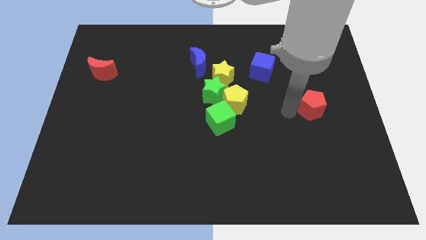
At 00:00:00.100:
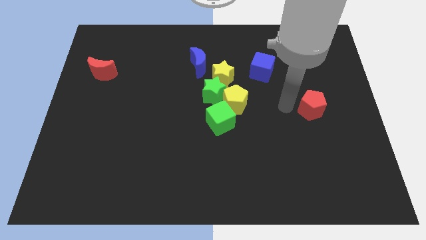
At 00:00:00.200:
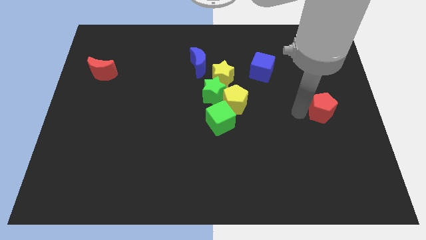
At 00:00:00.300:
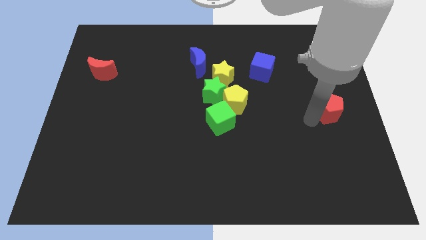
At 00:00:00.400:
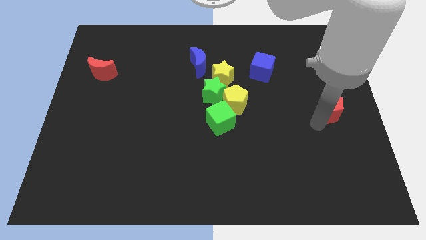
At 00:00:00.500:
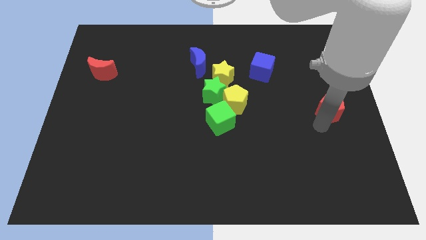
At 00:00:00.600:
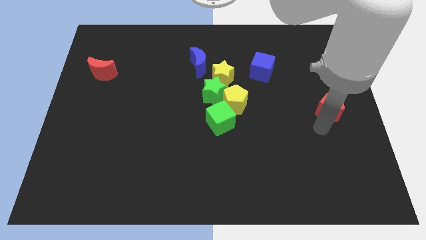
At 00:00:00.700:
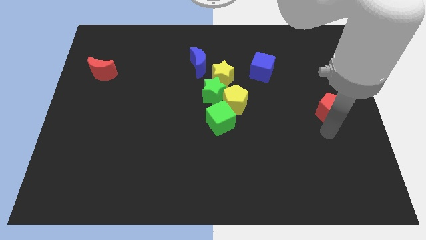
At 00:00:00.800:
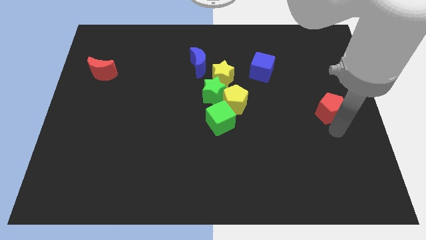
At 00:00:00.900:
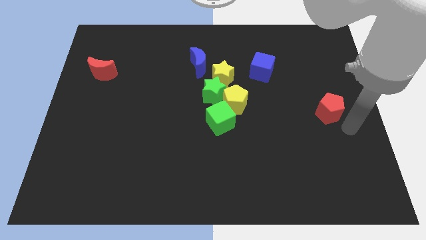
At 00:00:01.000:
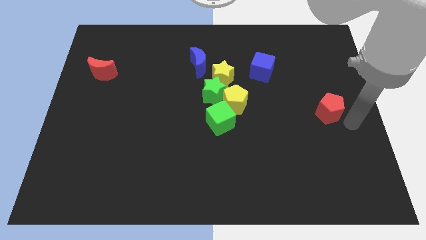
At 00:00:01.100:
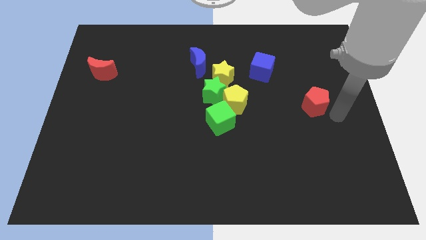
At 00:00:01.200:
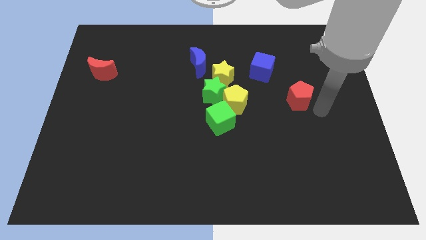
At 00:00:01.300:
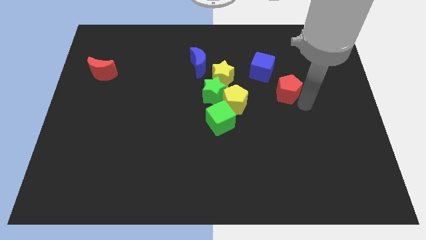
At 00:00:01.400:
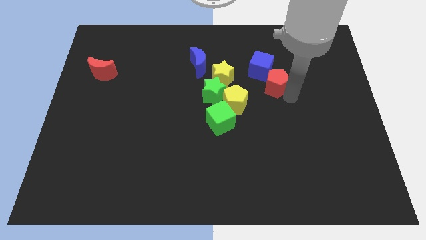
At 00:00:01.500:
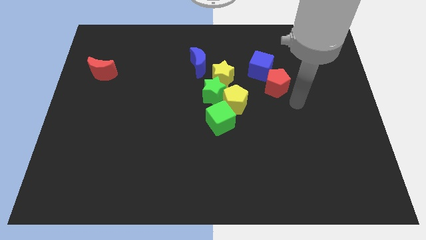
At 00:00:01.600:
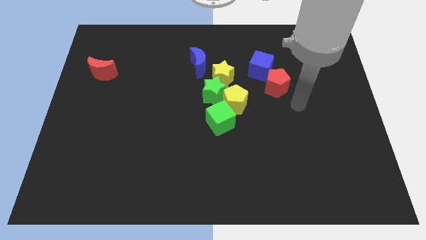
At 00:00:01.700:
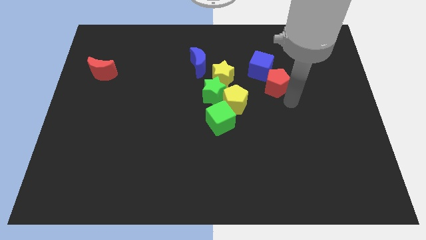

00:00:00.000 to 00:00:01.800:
slide the red pentagon to the bottom right side of the blue cube

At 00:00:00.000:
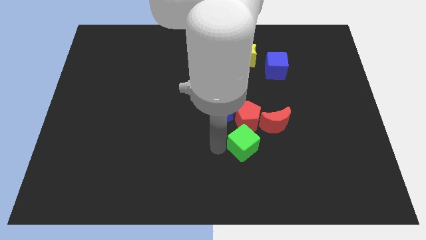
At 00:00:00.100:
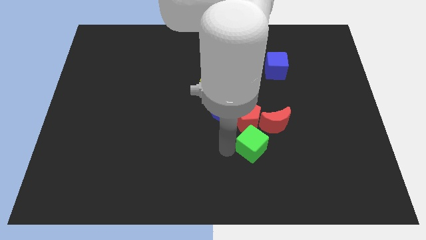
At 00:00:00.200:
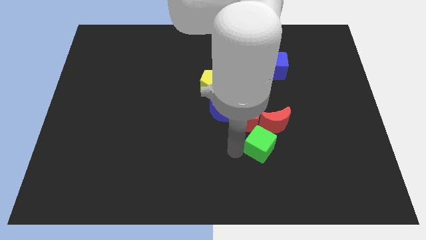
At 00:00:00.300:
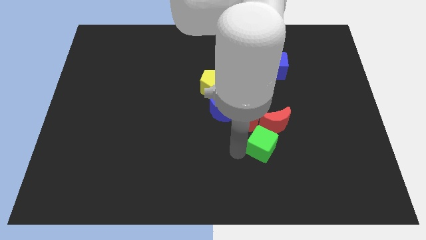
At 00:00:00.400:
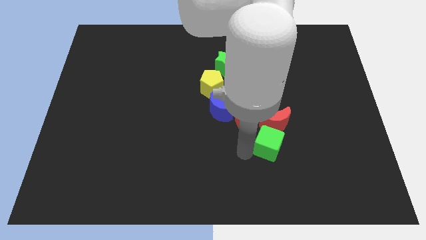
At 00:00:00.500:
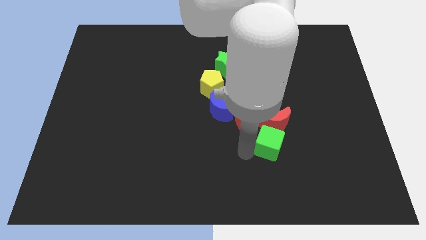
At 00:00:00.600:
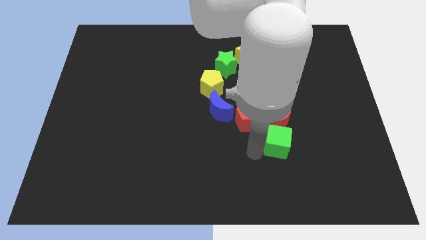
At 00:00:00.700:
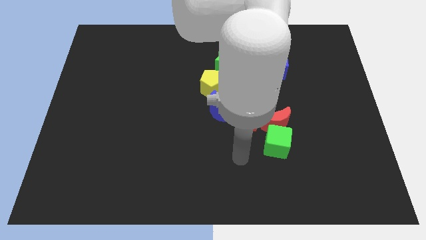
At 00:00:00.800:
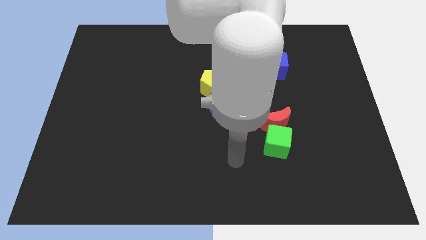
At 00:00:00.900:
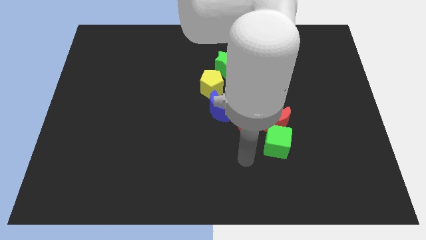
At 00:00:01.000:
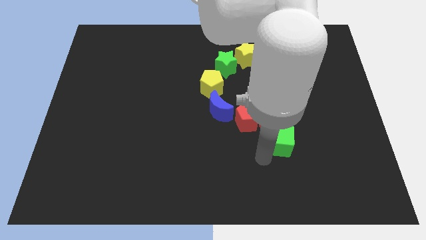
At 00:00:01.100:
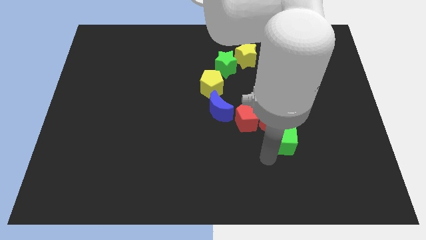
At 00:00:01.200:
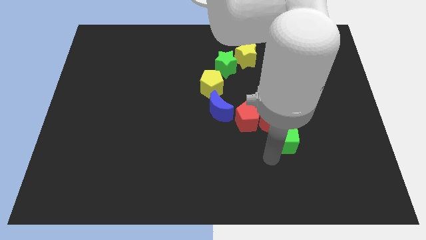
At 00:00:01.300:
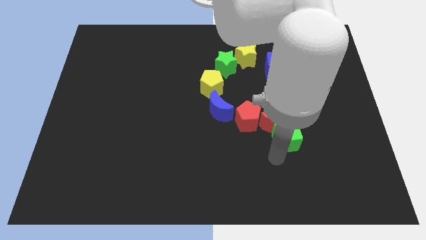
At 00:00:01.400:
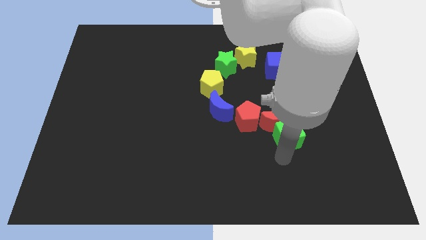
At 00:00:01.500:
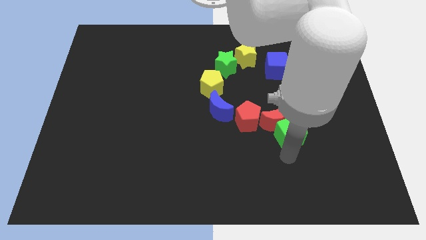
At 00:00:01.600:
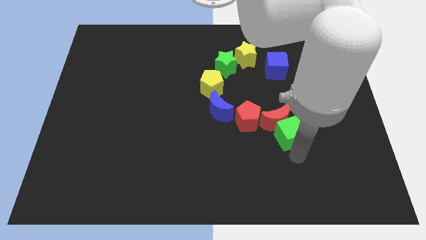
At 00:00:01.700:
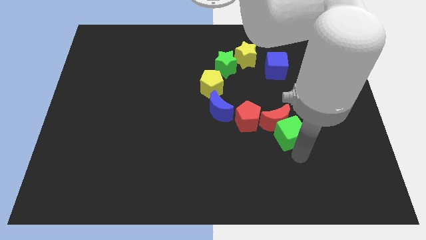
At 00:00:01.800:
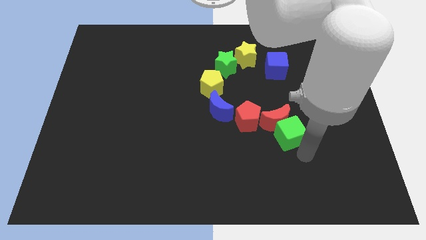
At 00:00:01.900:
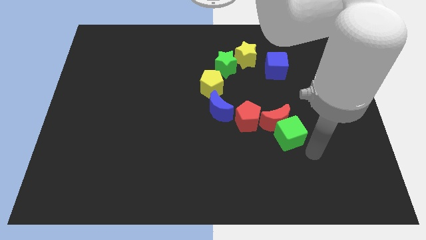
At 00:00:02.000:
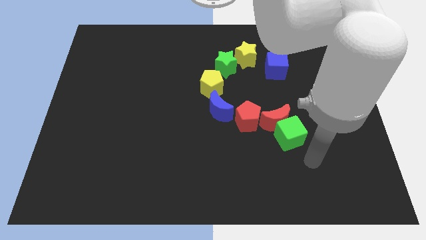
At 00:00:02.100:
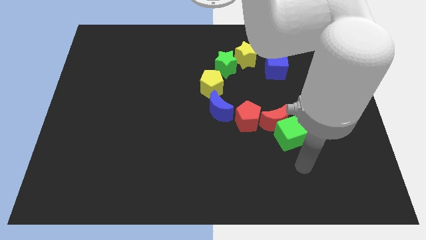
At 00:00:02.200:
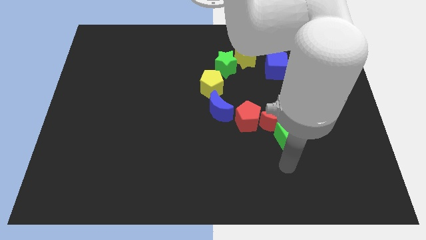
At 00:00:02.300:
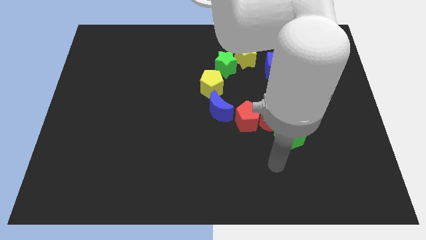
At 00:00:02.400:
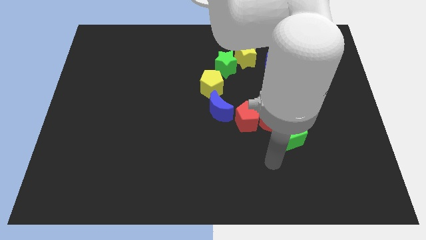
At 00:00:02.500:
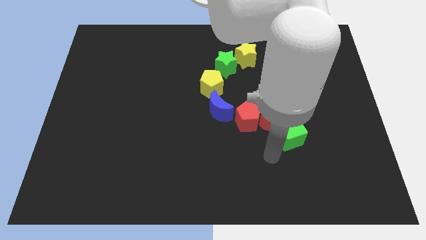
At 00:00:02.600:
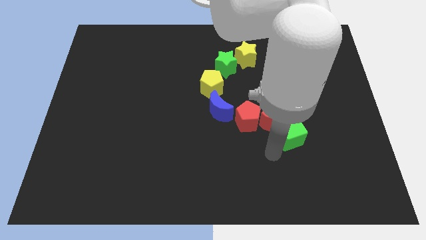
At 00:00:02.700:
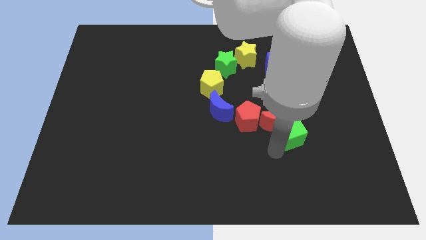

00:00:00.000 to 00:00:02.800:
move green cube below the red moon

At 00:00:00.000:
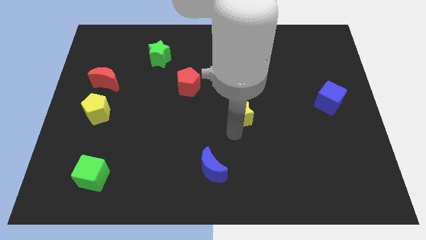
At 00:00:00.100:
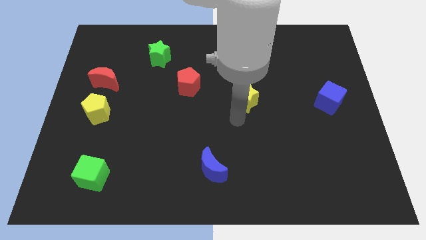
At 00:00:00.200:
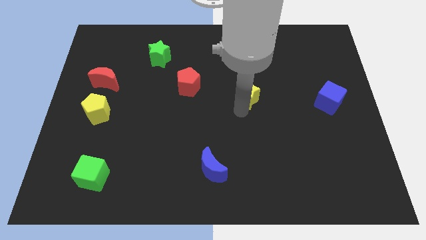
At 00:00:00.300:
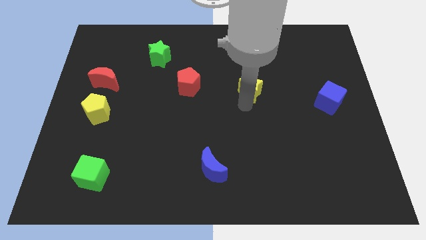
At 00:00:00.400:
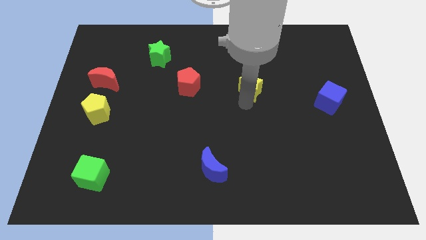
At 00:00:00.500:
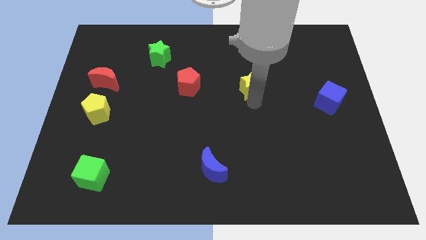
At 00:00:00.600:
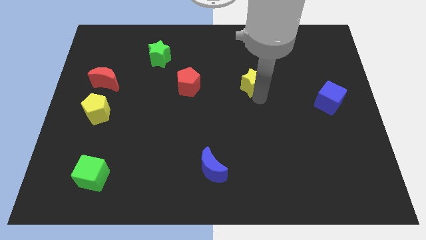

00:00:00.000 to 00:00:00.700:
place yellow star in between the red pentagon and blue cube

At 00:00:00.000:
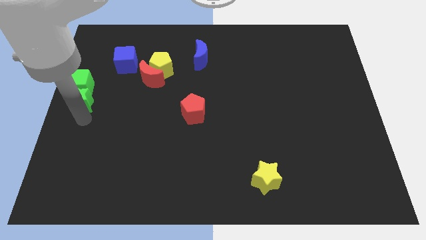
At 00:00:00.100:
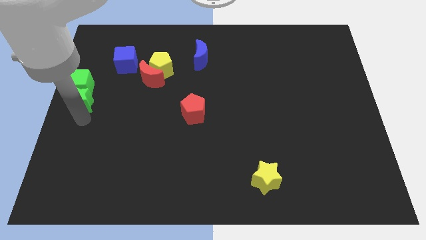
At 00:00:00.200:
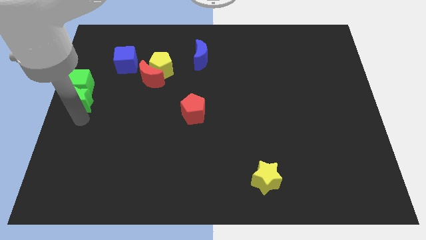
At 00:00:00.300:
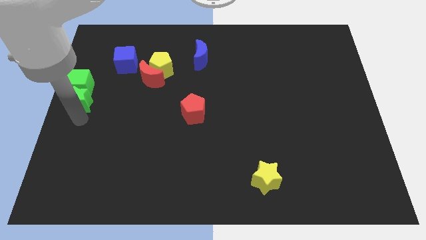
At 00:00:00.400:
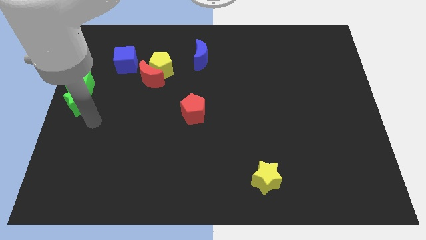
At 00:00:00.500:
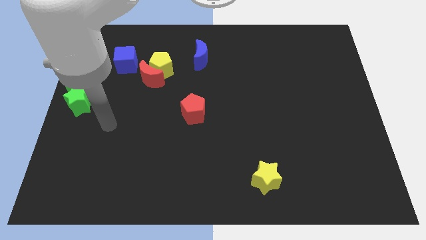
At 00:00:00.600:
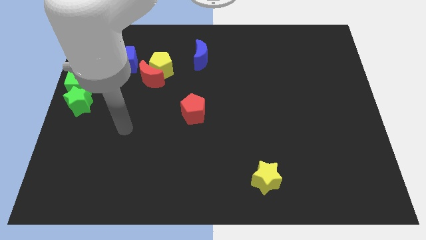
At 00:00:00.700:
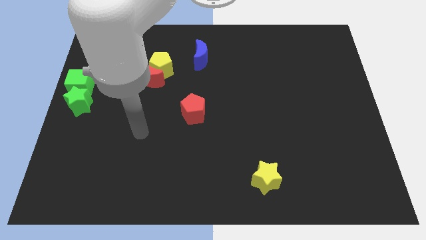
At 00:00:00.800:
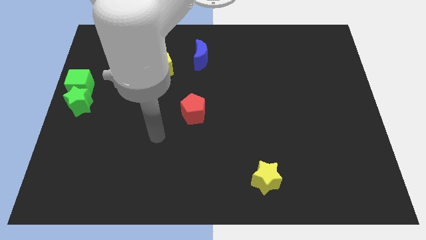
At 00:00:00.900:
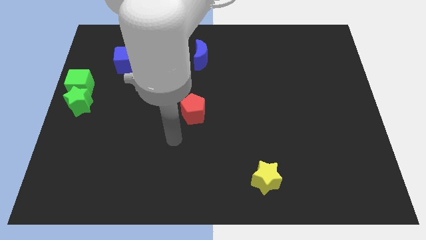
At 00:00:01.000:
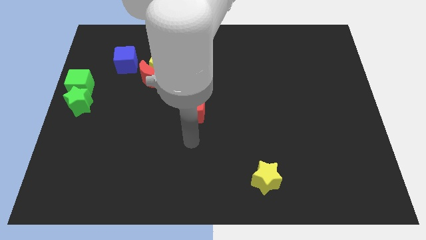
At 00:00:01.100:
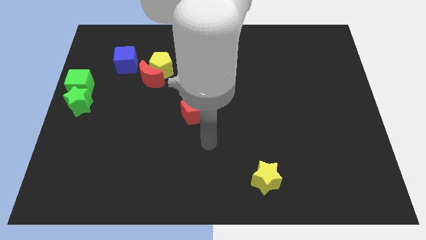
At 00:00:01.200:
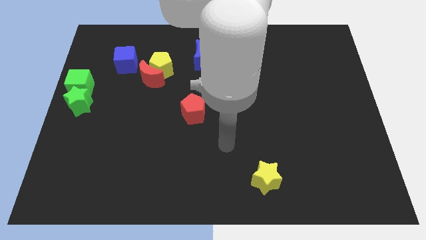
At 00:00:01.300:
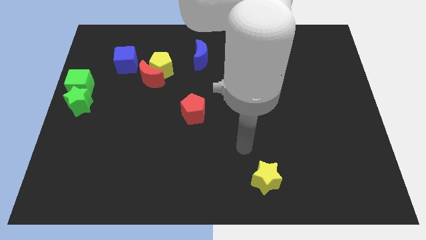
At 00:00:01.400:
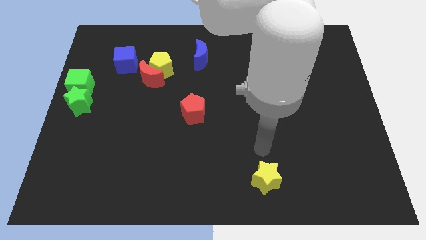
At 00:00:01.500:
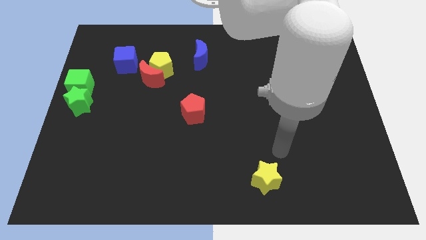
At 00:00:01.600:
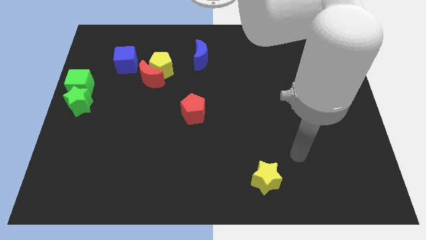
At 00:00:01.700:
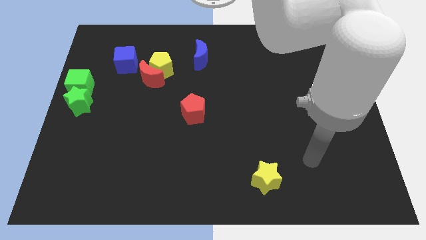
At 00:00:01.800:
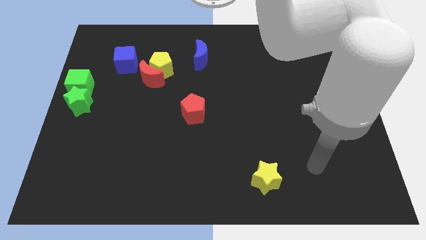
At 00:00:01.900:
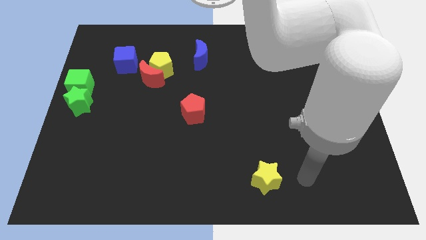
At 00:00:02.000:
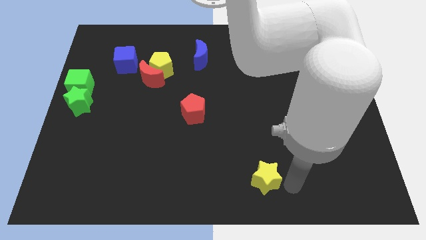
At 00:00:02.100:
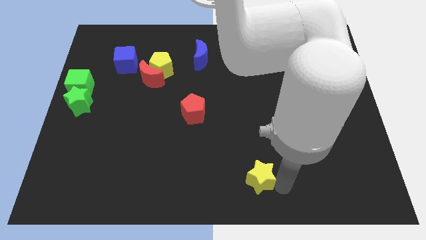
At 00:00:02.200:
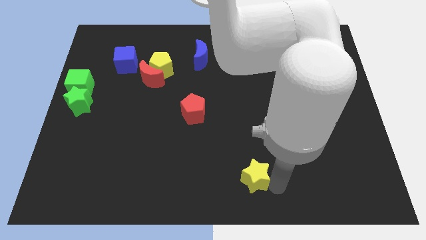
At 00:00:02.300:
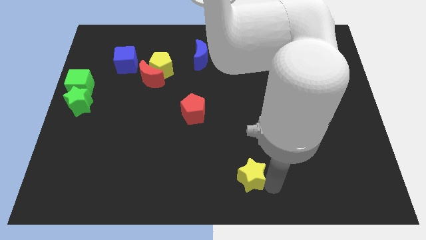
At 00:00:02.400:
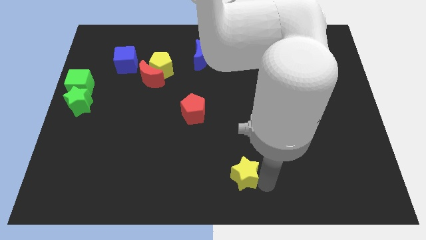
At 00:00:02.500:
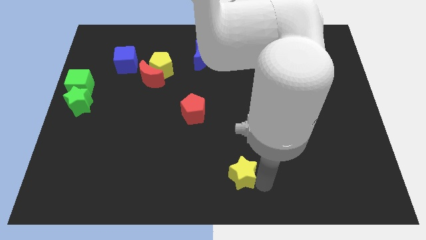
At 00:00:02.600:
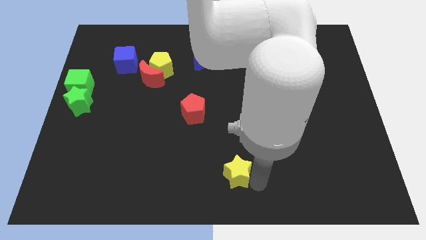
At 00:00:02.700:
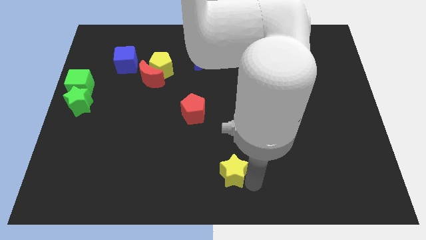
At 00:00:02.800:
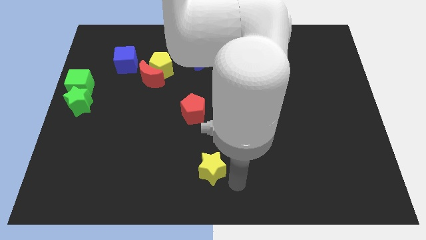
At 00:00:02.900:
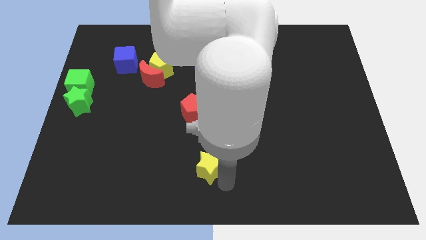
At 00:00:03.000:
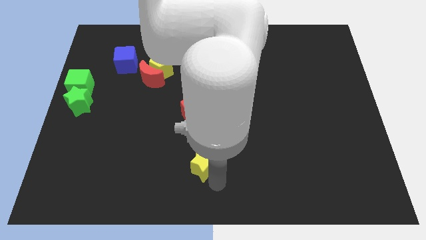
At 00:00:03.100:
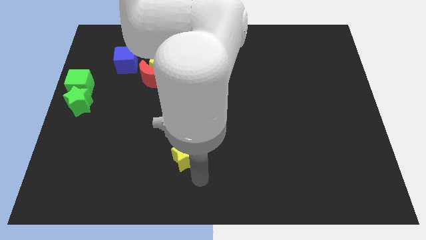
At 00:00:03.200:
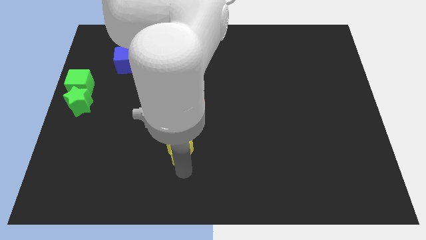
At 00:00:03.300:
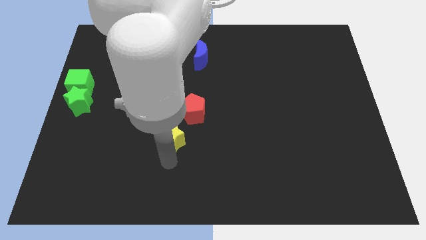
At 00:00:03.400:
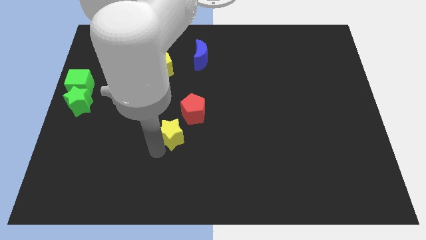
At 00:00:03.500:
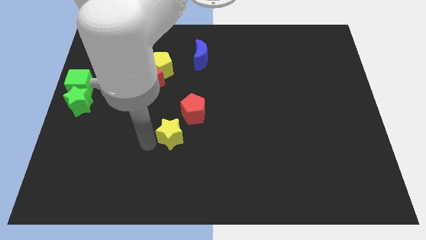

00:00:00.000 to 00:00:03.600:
place the yellow star at the bottom of red pentagon

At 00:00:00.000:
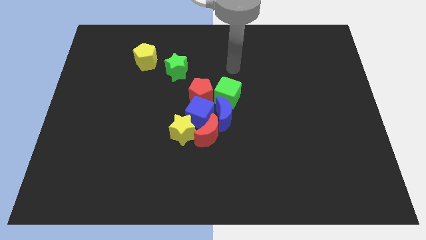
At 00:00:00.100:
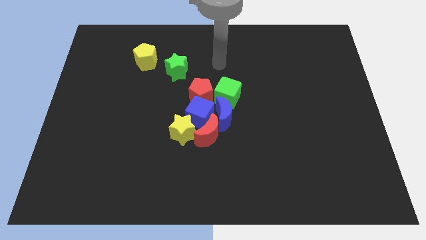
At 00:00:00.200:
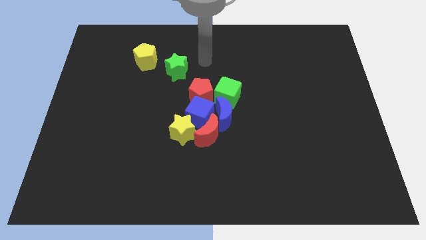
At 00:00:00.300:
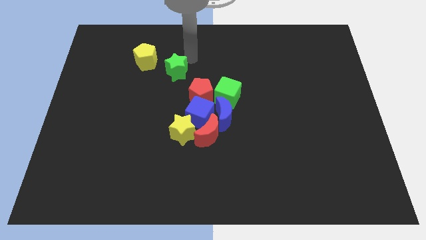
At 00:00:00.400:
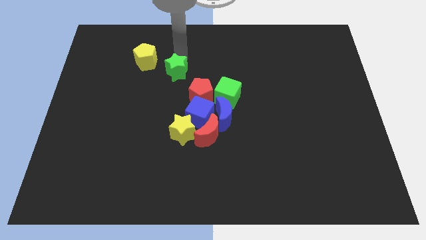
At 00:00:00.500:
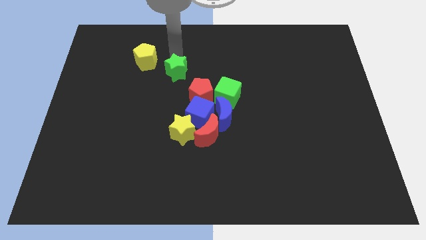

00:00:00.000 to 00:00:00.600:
move your arm above the green star
